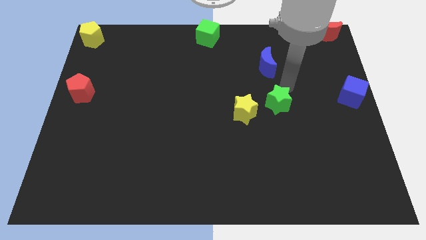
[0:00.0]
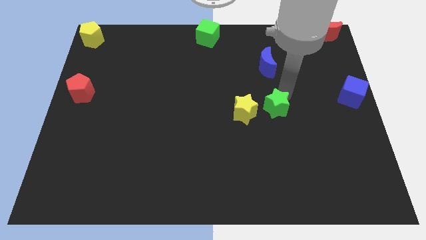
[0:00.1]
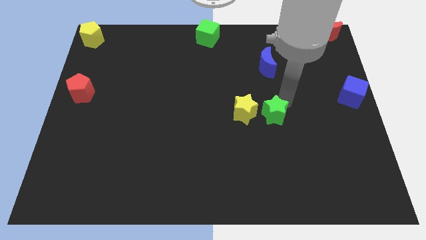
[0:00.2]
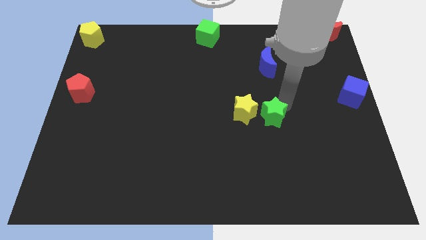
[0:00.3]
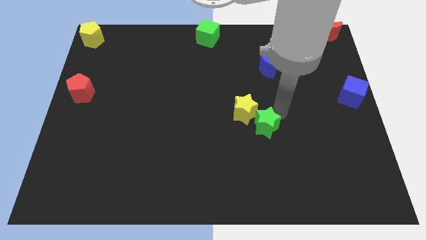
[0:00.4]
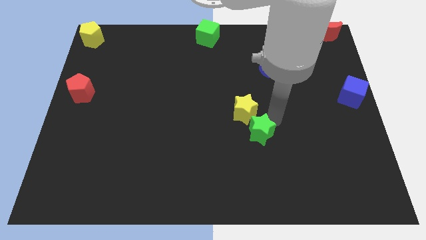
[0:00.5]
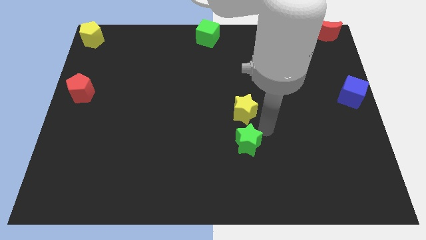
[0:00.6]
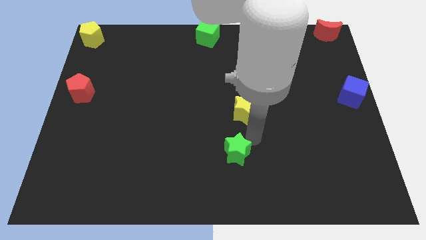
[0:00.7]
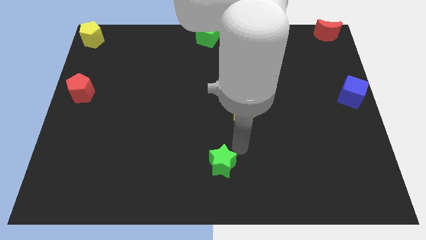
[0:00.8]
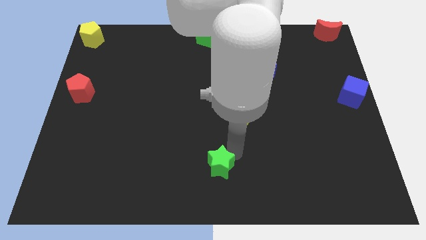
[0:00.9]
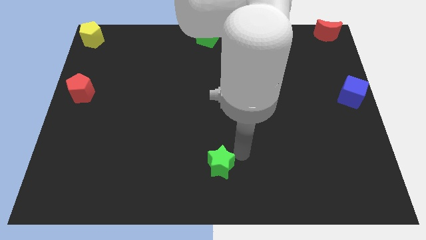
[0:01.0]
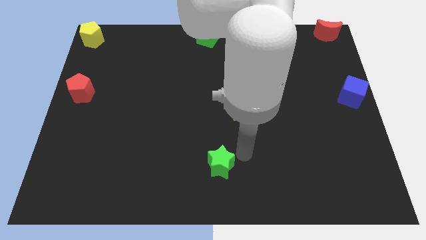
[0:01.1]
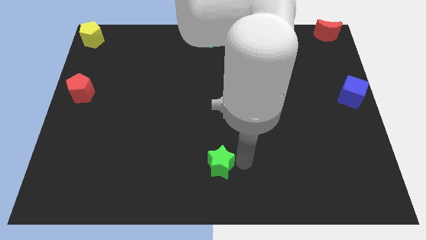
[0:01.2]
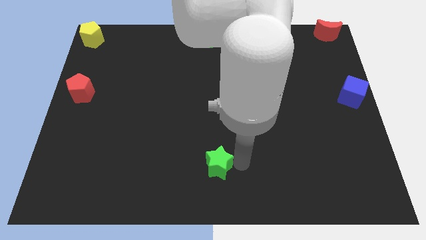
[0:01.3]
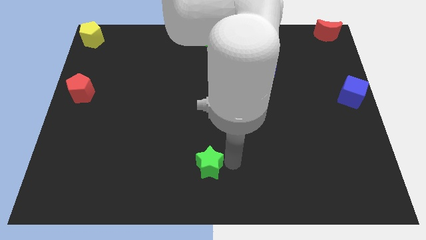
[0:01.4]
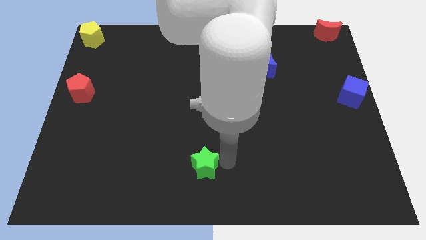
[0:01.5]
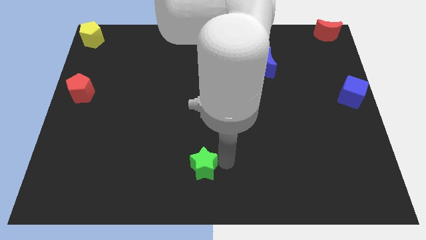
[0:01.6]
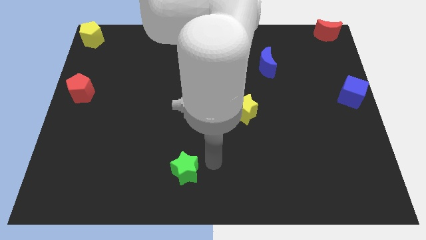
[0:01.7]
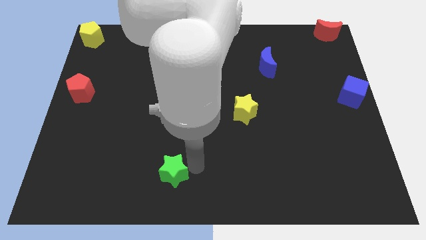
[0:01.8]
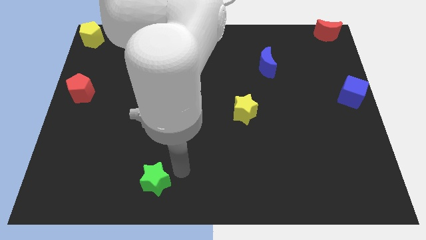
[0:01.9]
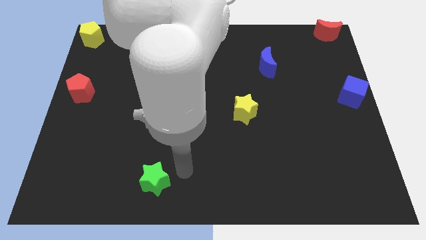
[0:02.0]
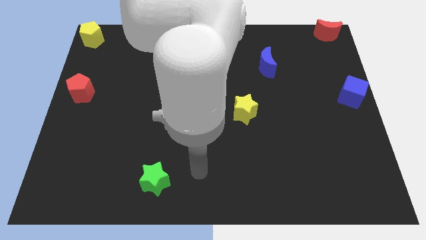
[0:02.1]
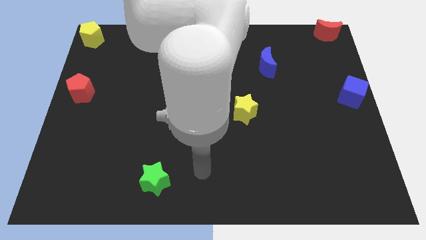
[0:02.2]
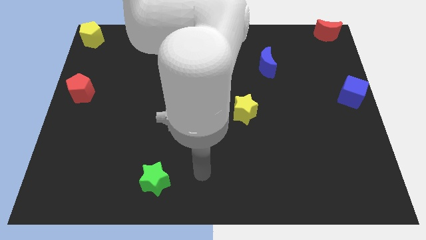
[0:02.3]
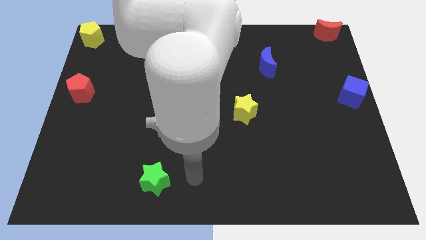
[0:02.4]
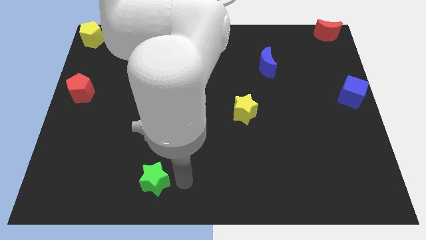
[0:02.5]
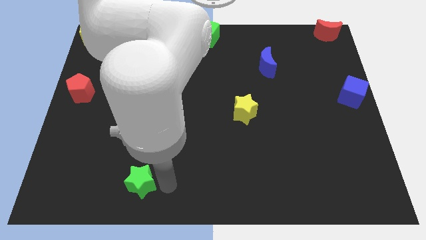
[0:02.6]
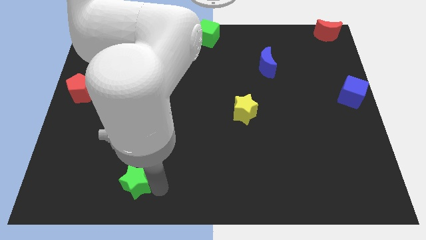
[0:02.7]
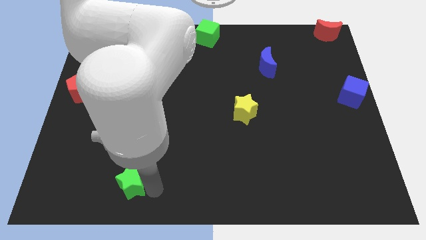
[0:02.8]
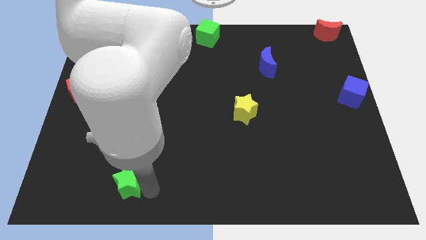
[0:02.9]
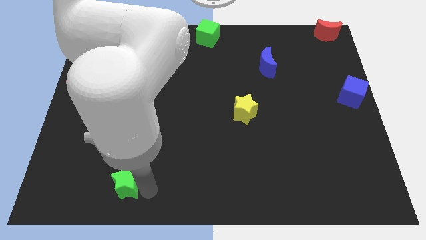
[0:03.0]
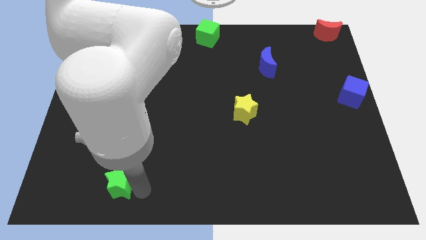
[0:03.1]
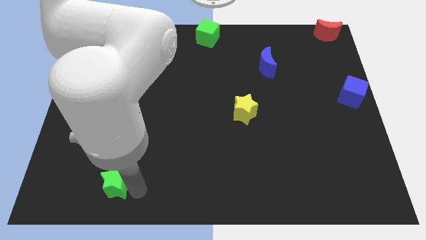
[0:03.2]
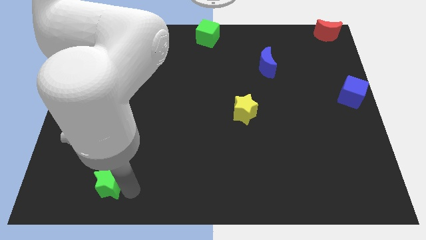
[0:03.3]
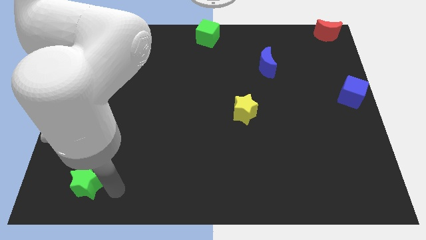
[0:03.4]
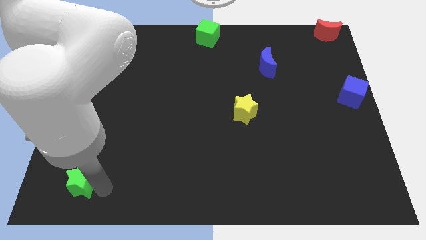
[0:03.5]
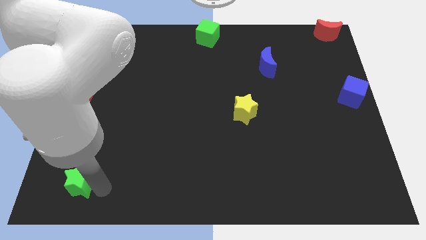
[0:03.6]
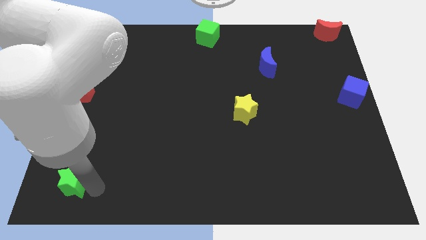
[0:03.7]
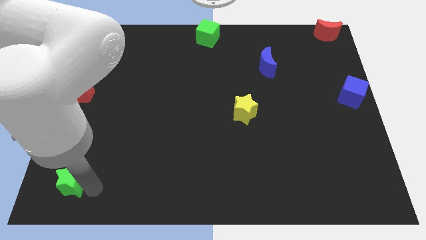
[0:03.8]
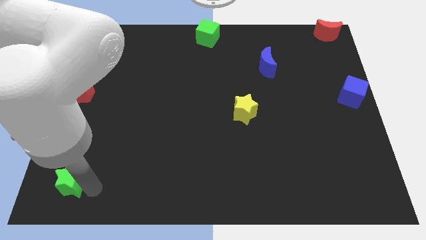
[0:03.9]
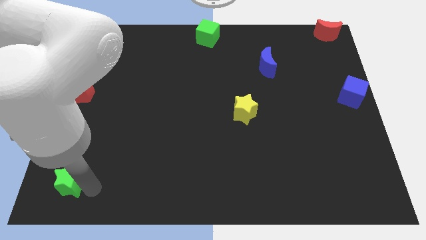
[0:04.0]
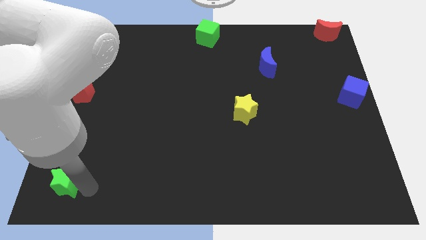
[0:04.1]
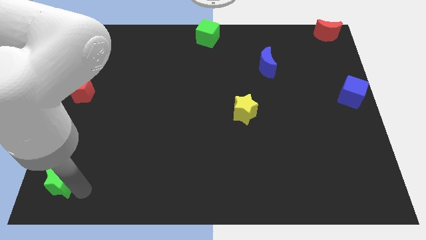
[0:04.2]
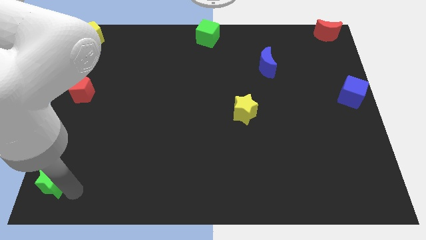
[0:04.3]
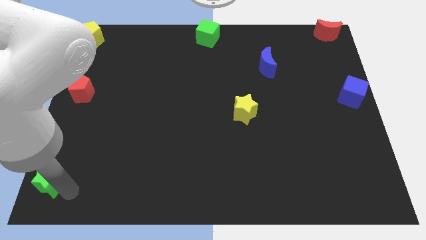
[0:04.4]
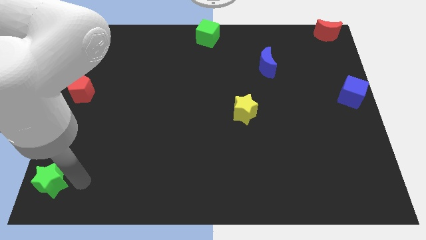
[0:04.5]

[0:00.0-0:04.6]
push the green star towards the bottom left corner of the board

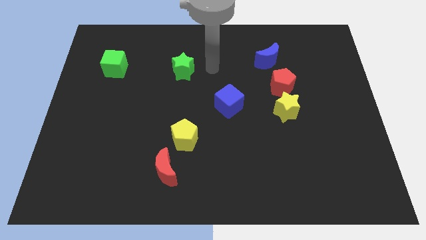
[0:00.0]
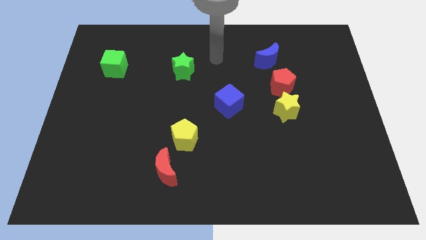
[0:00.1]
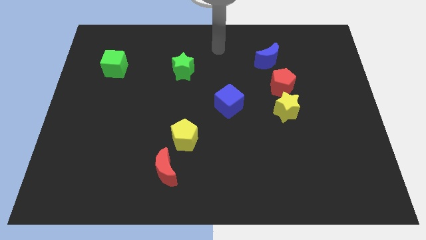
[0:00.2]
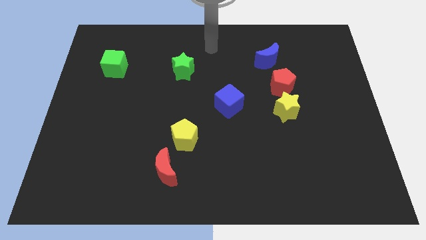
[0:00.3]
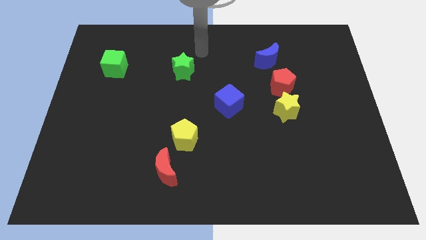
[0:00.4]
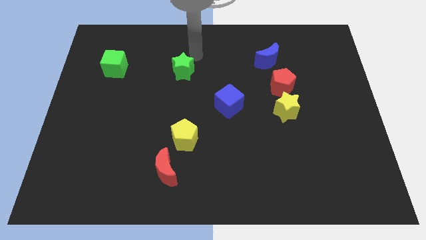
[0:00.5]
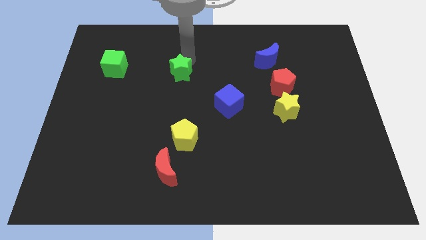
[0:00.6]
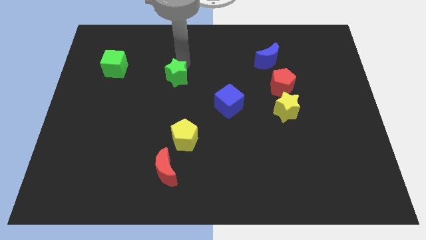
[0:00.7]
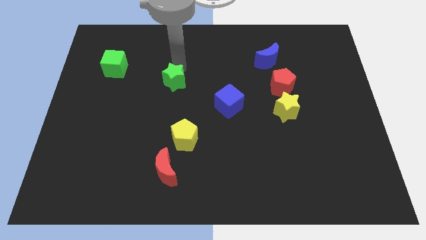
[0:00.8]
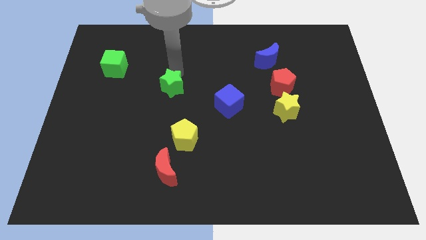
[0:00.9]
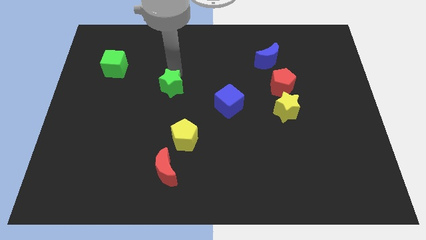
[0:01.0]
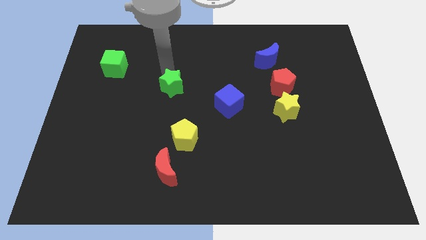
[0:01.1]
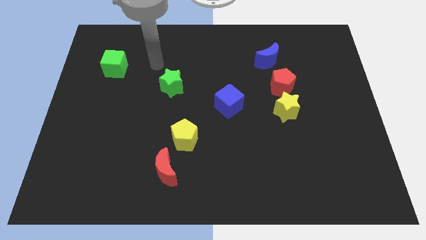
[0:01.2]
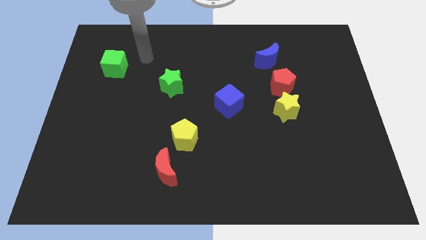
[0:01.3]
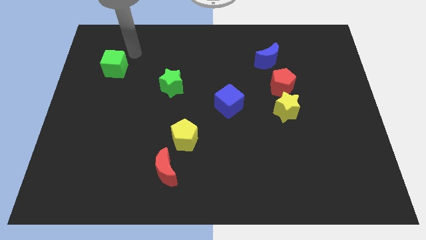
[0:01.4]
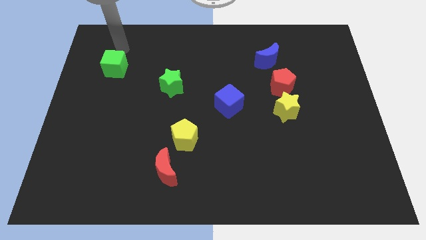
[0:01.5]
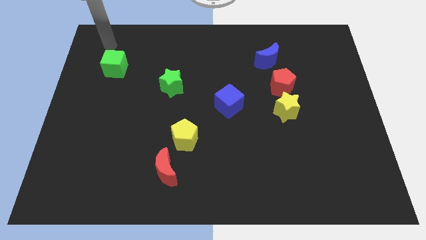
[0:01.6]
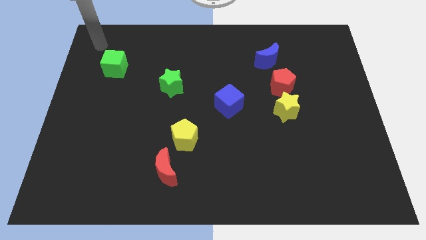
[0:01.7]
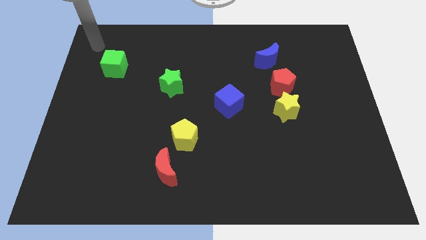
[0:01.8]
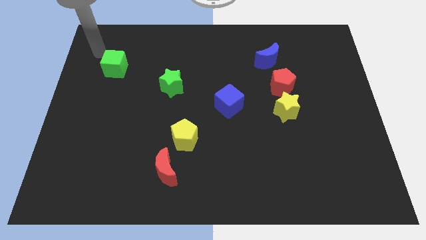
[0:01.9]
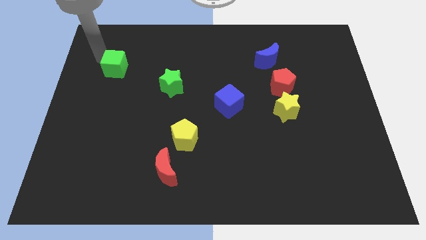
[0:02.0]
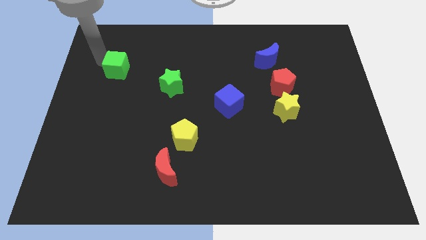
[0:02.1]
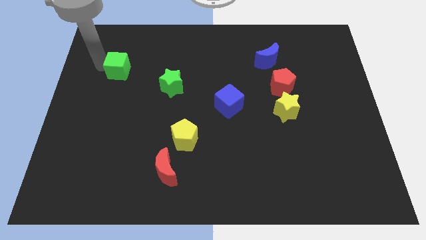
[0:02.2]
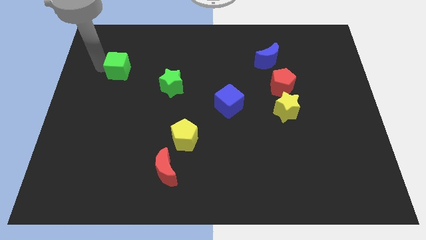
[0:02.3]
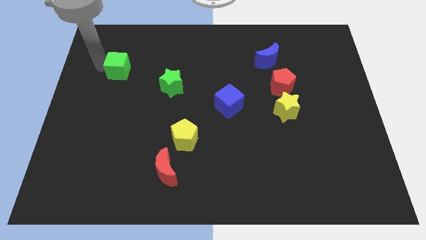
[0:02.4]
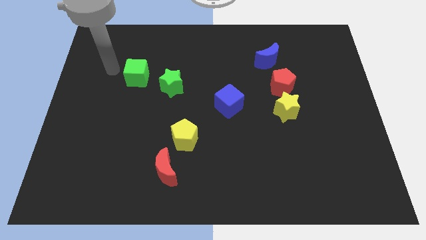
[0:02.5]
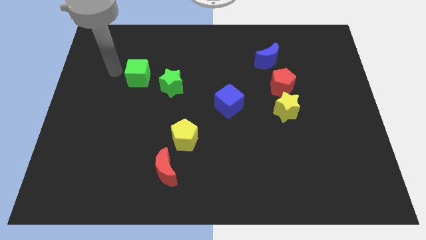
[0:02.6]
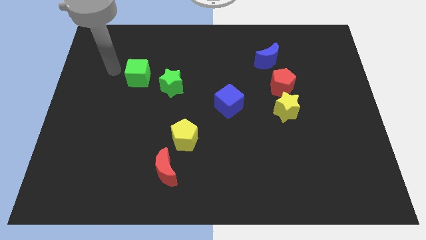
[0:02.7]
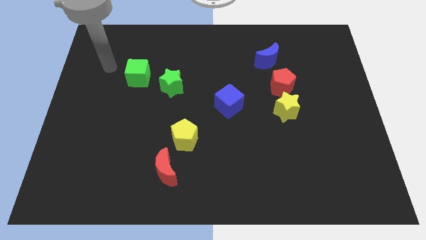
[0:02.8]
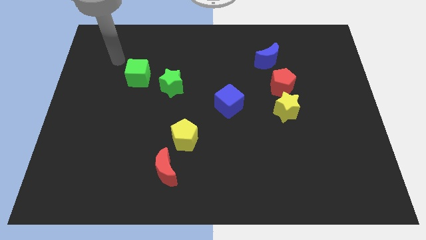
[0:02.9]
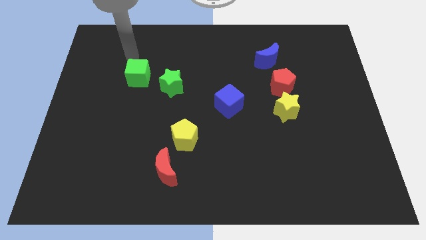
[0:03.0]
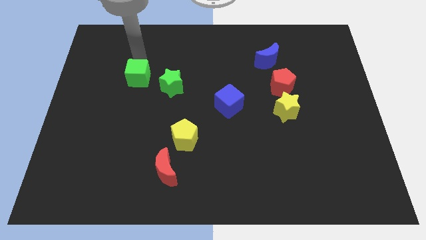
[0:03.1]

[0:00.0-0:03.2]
move your arm towards the green cube

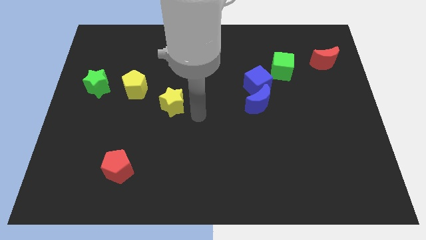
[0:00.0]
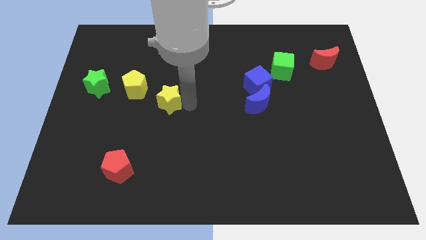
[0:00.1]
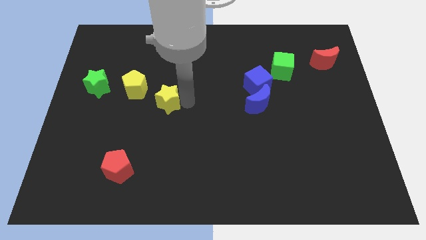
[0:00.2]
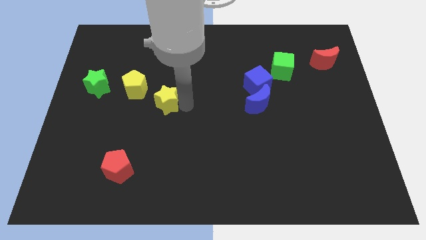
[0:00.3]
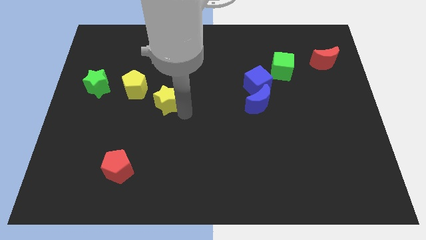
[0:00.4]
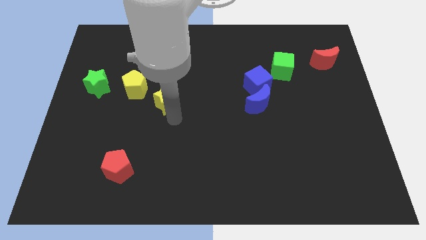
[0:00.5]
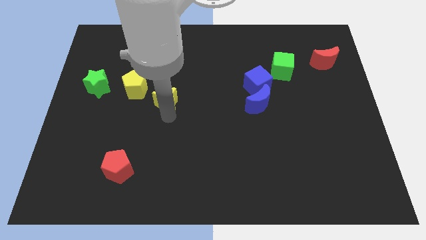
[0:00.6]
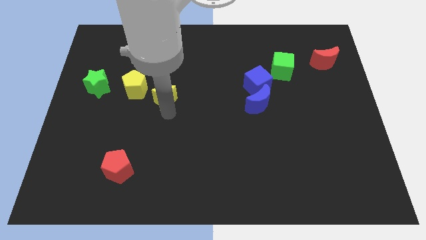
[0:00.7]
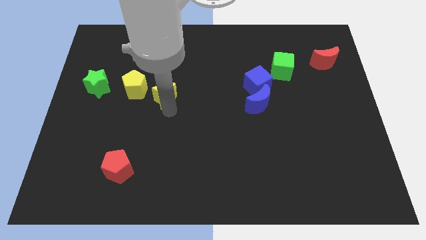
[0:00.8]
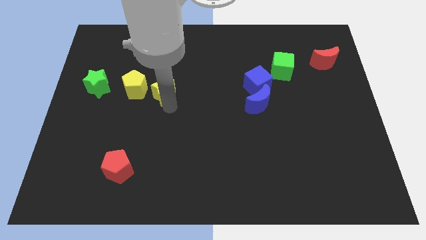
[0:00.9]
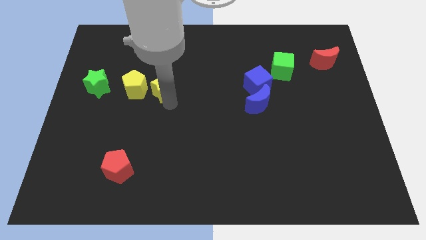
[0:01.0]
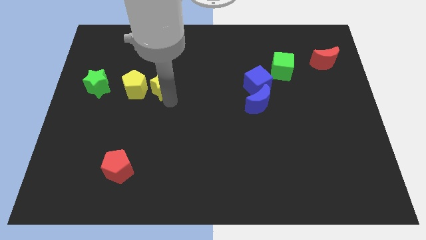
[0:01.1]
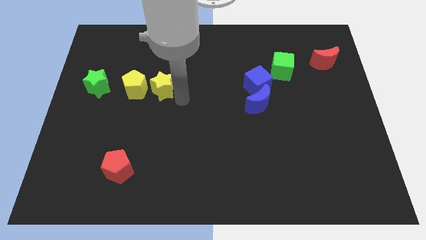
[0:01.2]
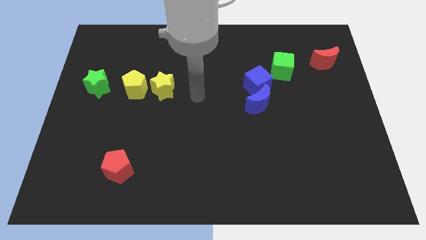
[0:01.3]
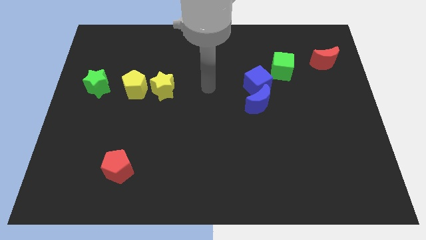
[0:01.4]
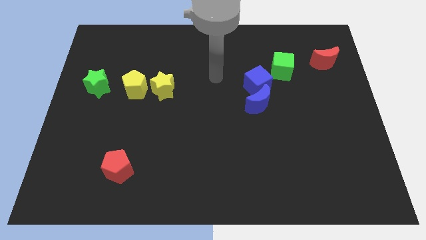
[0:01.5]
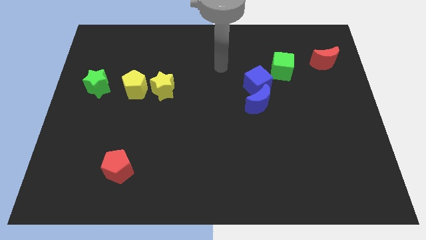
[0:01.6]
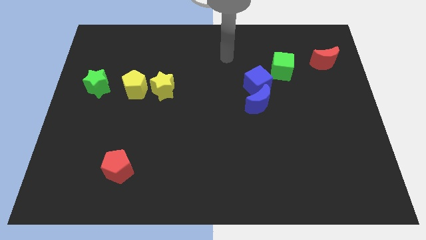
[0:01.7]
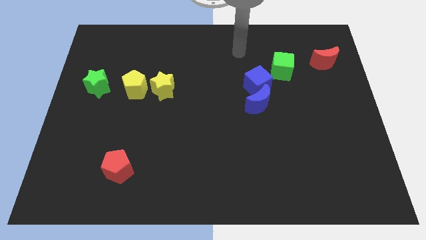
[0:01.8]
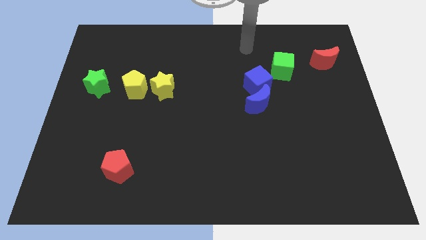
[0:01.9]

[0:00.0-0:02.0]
place a yellow star close to the yellow pentagon
